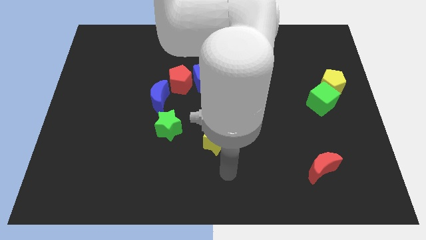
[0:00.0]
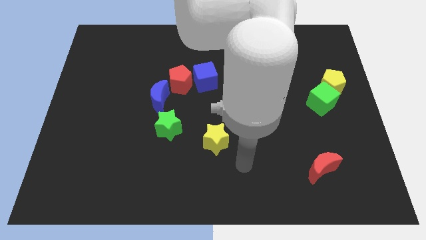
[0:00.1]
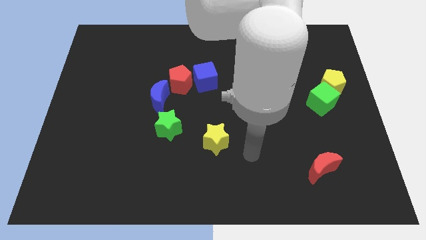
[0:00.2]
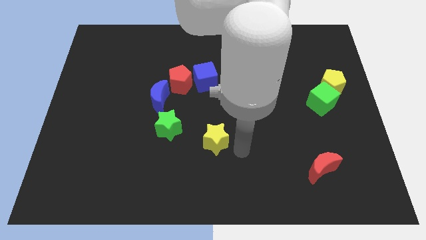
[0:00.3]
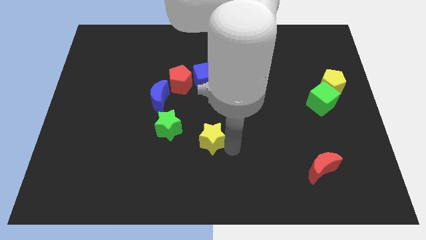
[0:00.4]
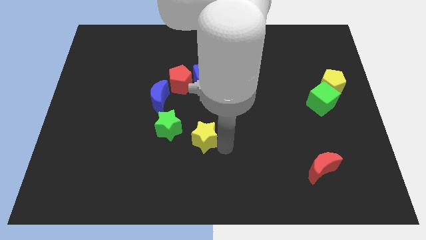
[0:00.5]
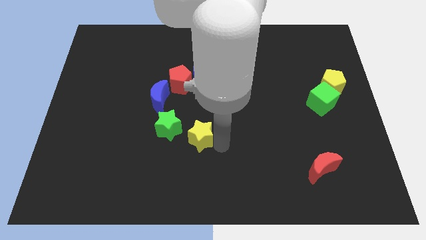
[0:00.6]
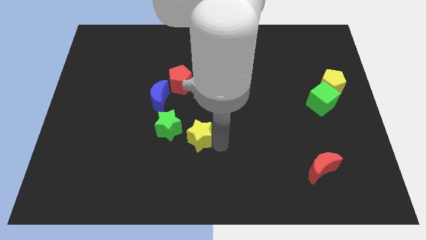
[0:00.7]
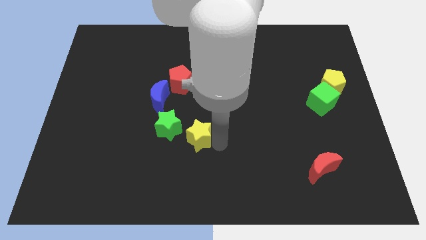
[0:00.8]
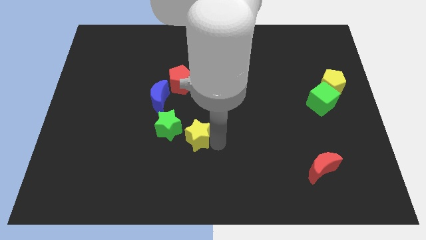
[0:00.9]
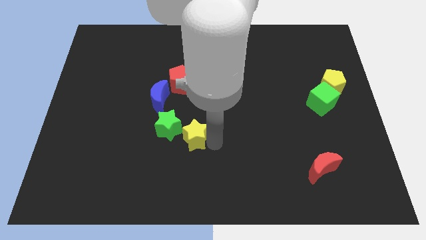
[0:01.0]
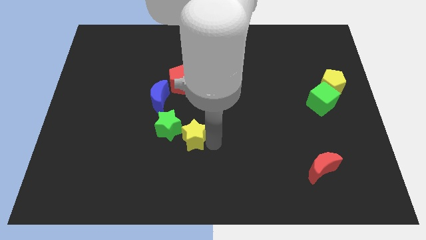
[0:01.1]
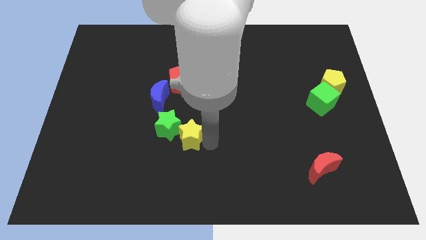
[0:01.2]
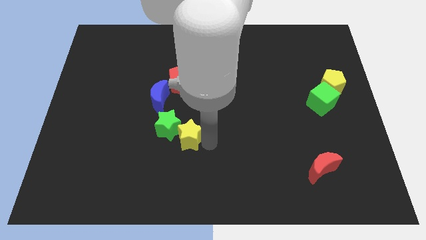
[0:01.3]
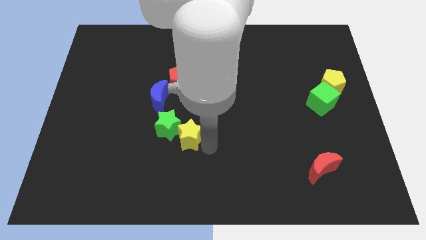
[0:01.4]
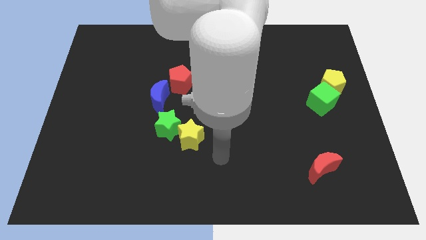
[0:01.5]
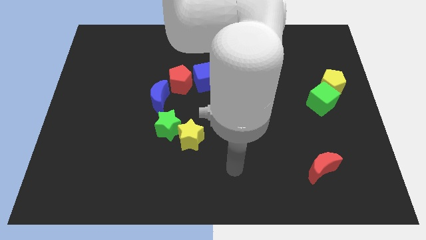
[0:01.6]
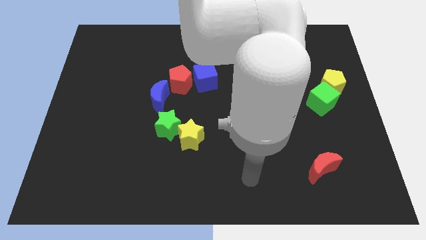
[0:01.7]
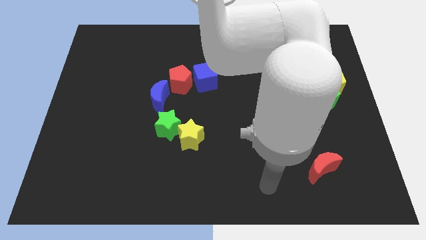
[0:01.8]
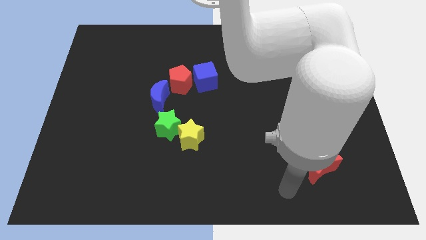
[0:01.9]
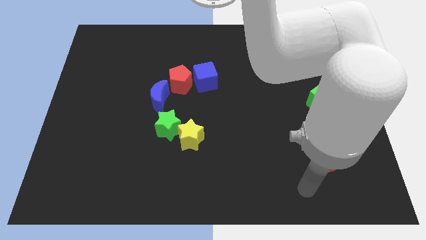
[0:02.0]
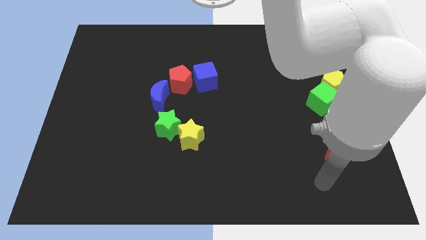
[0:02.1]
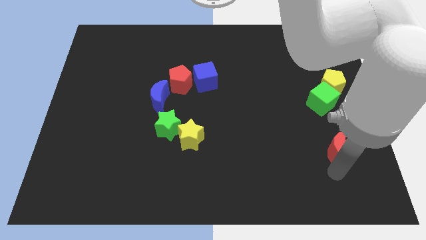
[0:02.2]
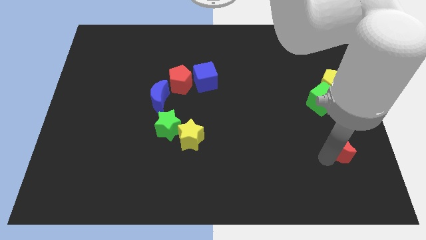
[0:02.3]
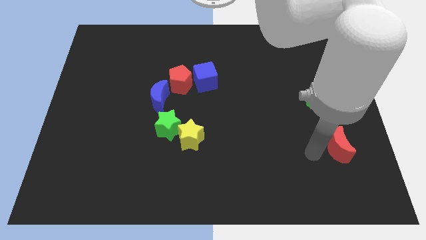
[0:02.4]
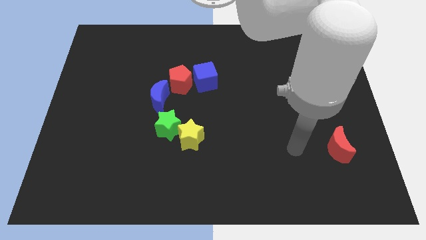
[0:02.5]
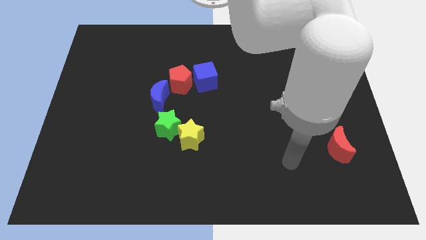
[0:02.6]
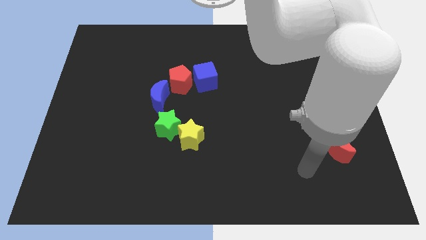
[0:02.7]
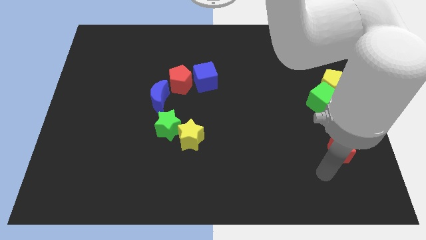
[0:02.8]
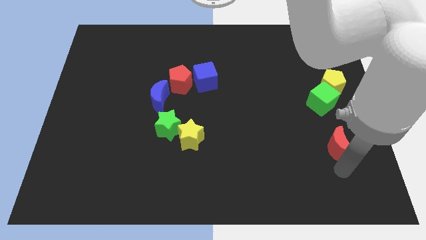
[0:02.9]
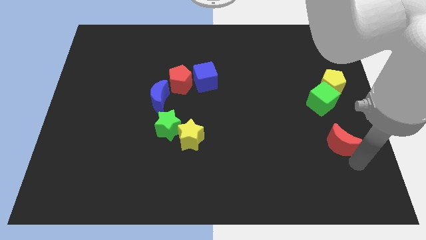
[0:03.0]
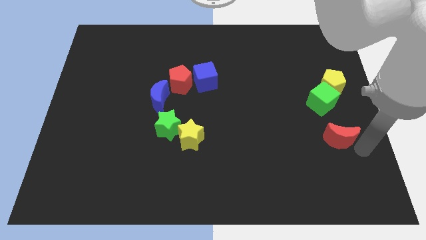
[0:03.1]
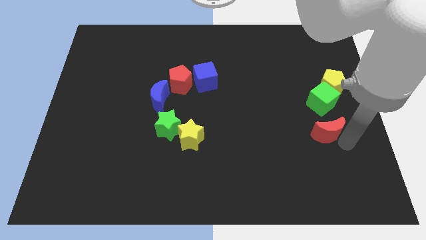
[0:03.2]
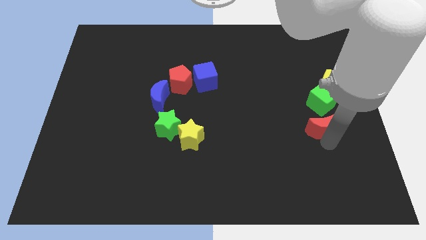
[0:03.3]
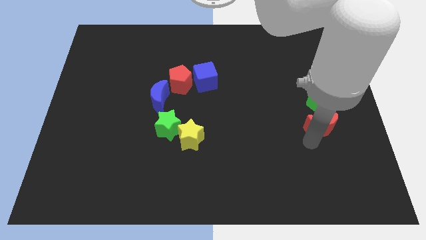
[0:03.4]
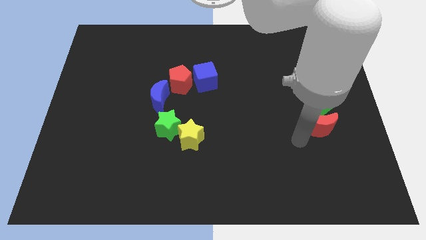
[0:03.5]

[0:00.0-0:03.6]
move the red crescent below the green cube

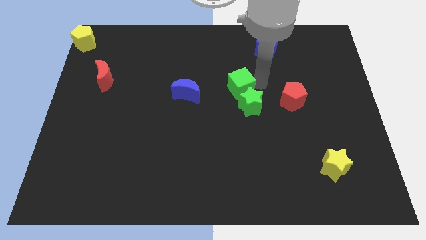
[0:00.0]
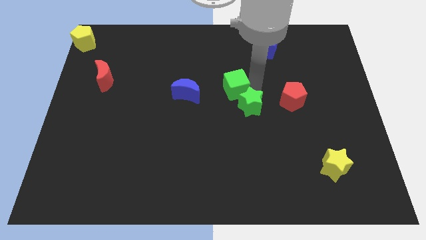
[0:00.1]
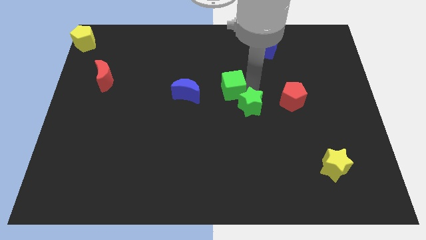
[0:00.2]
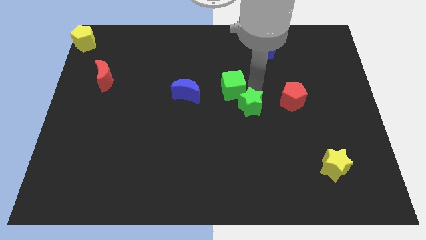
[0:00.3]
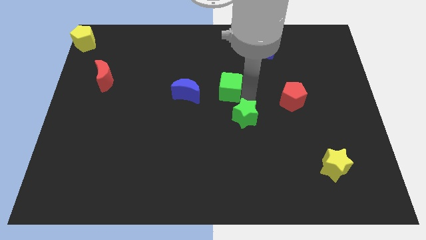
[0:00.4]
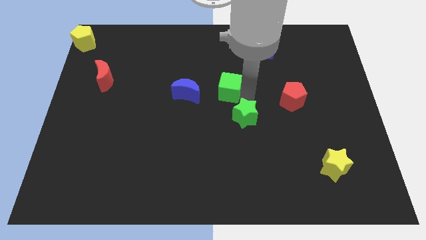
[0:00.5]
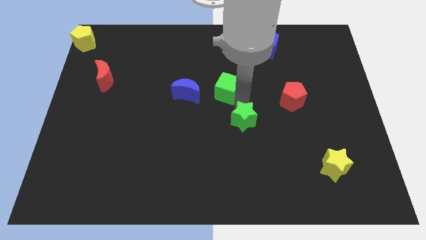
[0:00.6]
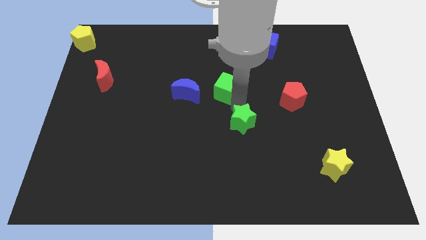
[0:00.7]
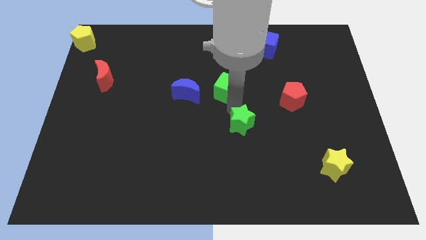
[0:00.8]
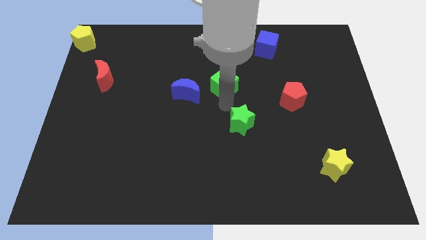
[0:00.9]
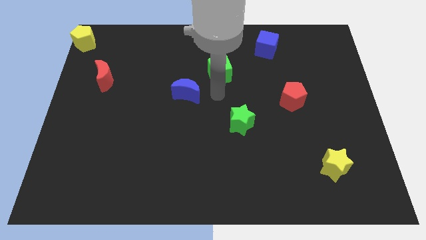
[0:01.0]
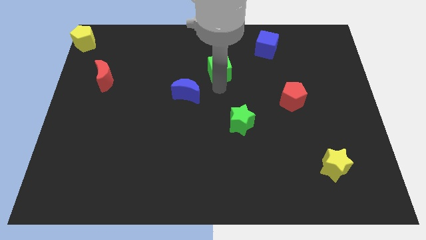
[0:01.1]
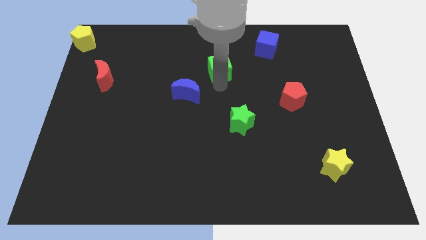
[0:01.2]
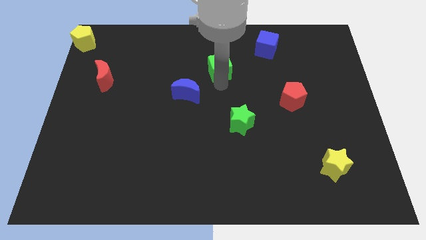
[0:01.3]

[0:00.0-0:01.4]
move the green cube and the green star away from each other

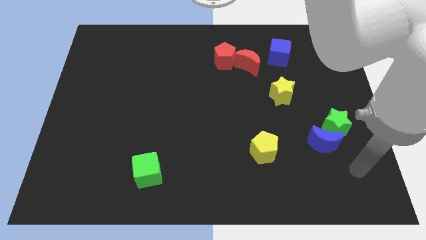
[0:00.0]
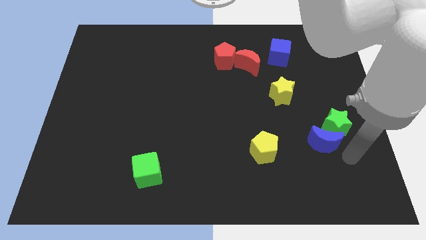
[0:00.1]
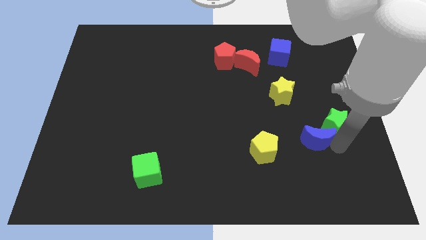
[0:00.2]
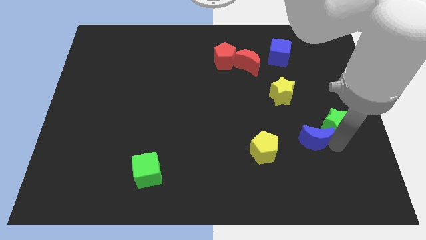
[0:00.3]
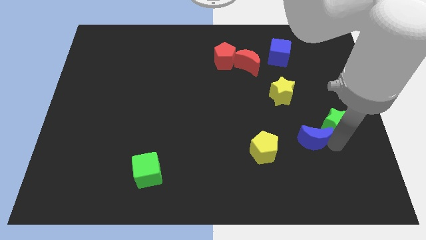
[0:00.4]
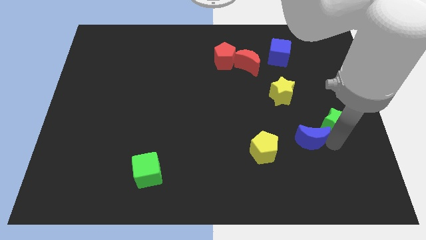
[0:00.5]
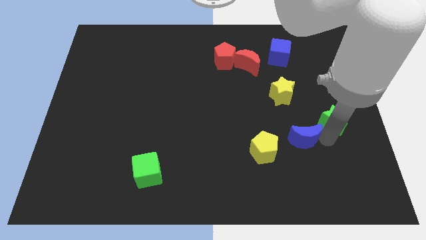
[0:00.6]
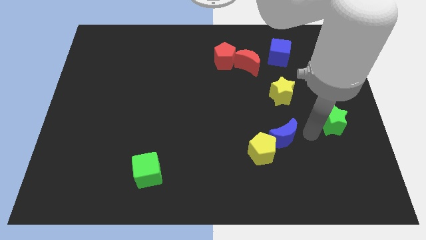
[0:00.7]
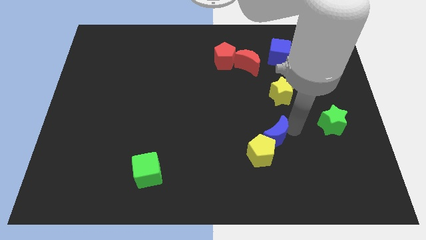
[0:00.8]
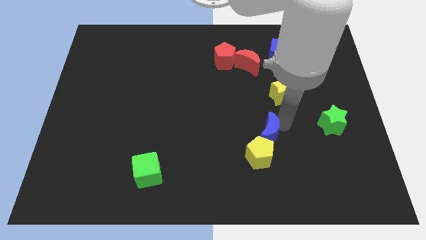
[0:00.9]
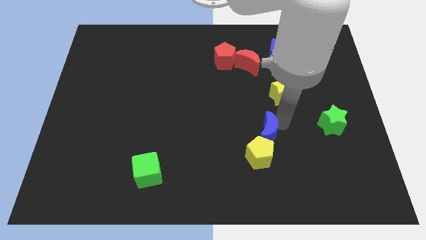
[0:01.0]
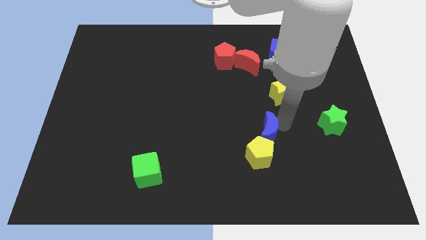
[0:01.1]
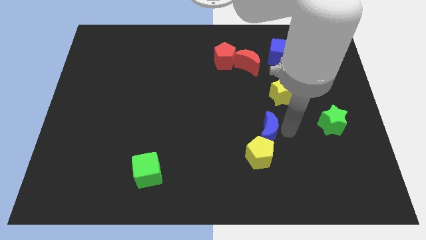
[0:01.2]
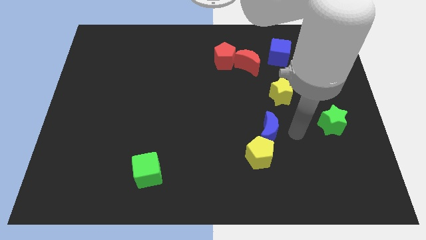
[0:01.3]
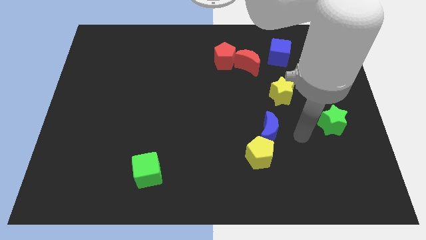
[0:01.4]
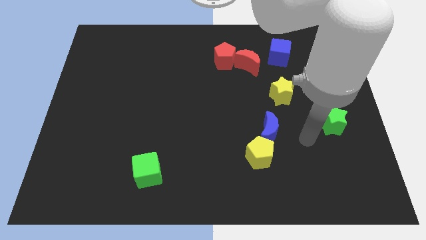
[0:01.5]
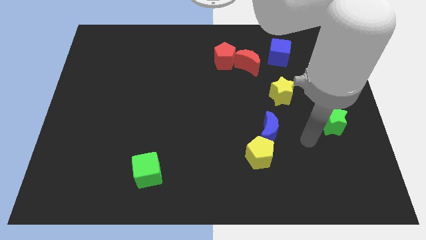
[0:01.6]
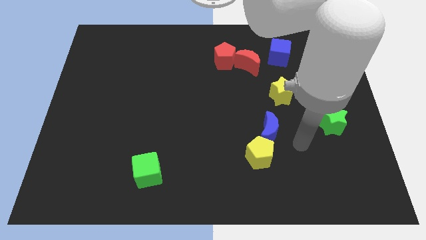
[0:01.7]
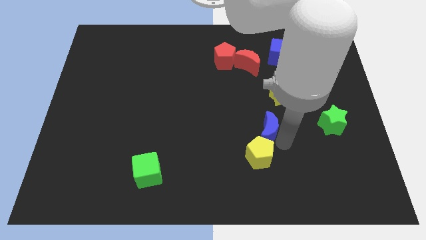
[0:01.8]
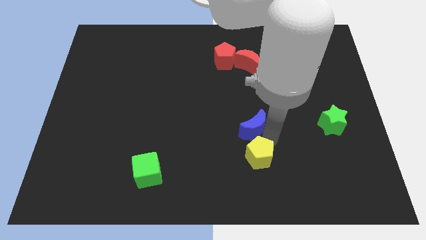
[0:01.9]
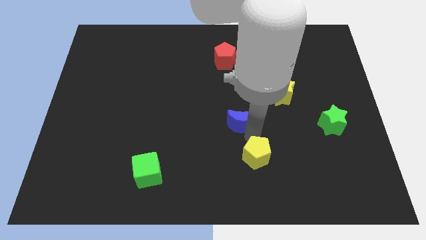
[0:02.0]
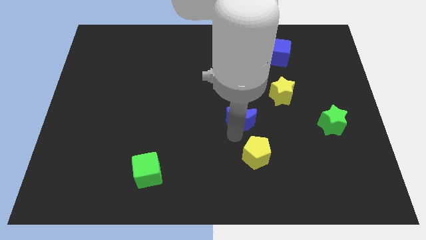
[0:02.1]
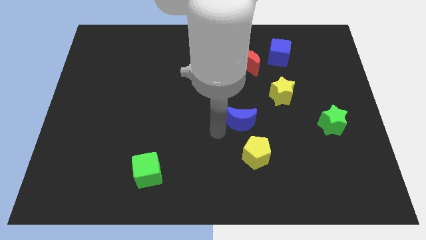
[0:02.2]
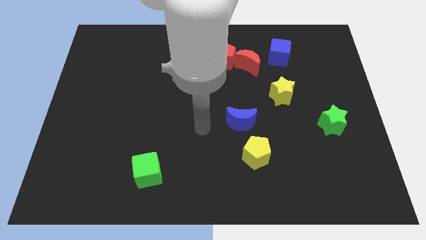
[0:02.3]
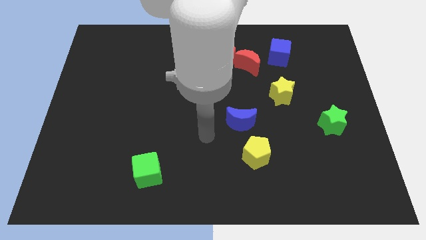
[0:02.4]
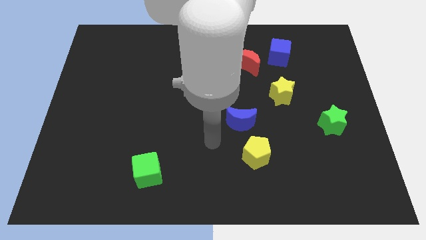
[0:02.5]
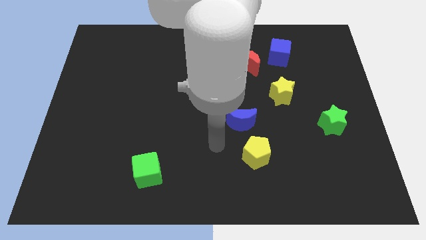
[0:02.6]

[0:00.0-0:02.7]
move blue crescent away from the green star

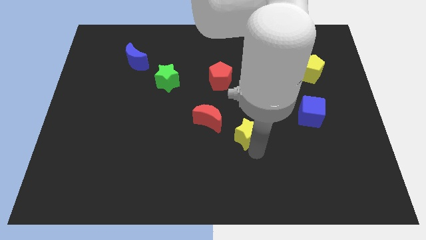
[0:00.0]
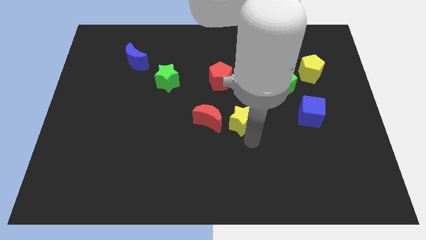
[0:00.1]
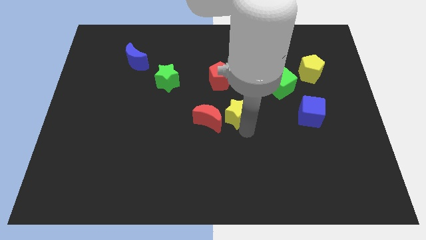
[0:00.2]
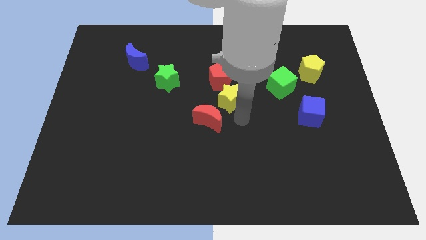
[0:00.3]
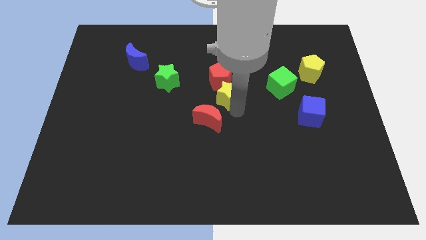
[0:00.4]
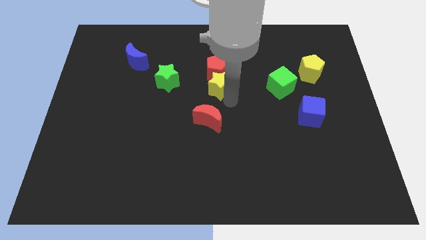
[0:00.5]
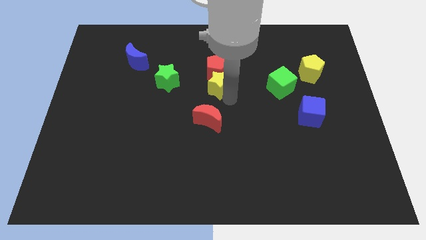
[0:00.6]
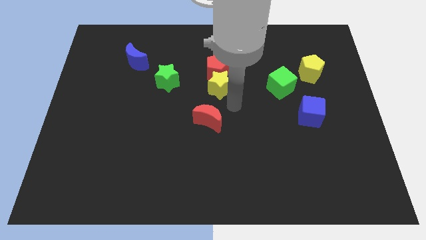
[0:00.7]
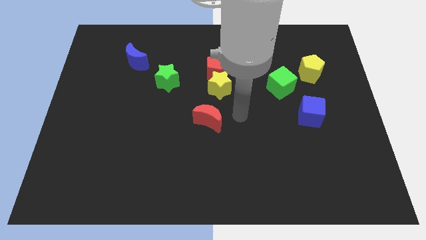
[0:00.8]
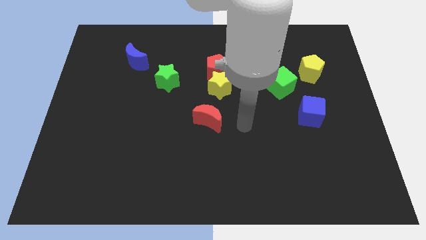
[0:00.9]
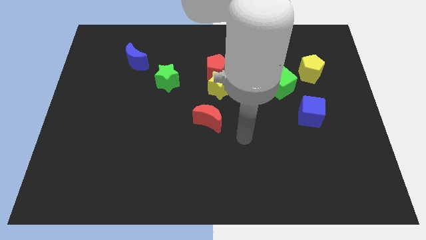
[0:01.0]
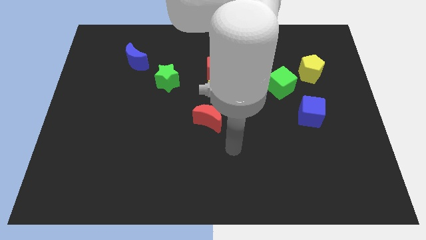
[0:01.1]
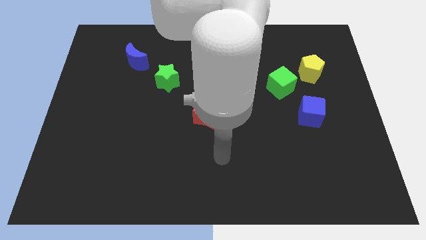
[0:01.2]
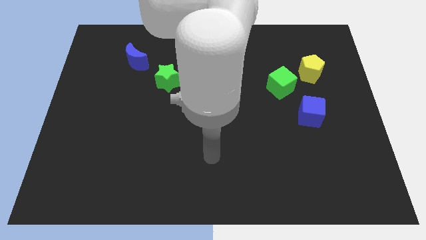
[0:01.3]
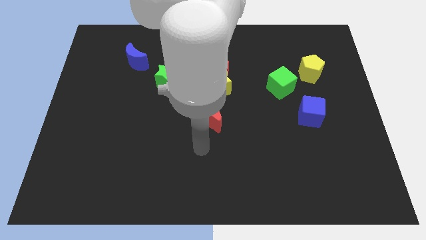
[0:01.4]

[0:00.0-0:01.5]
push the yellow star to the bottom of the red pentagon
